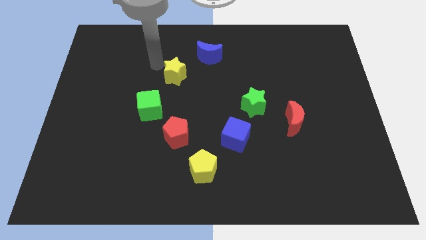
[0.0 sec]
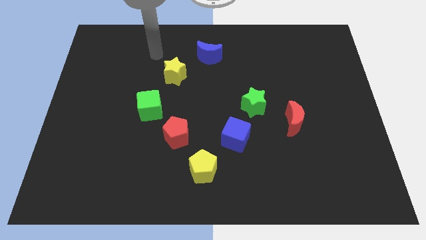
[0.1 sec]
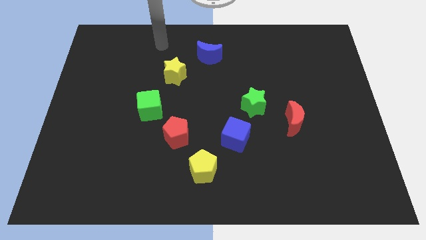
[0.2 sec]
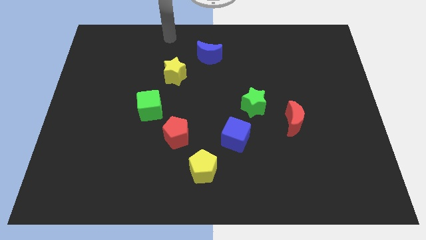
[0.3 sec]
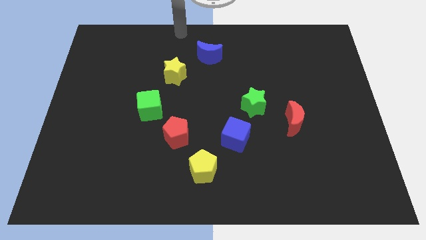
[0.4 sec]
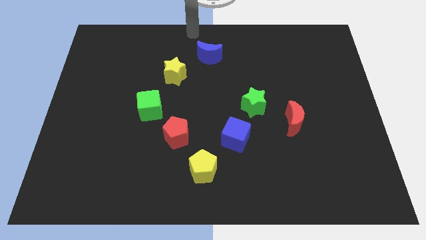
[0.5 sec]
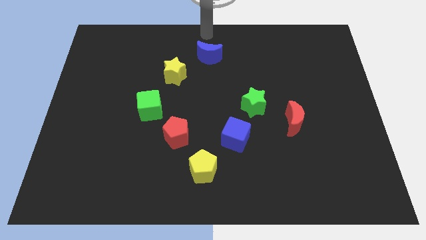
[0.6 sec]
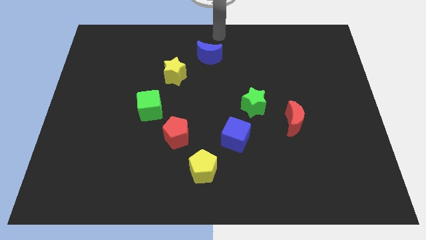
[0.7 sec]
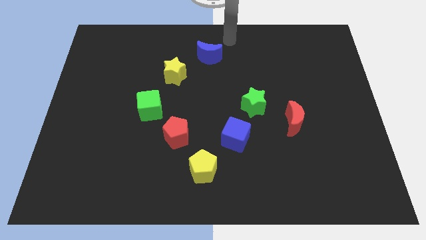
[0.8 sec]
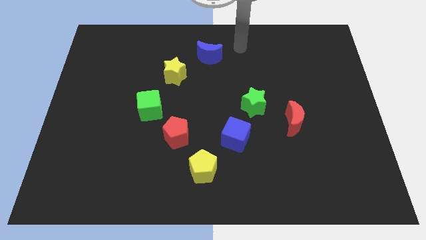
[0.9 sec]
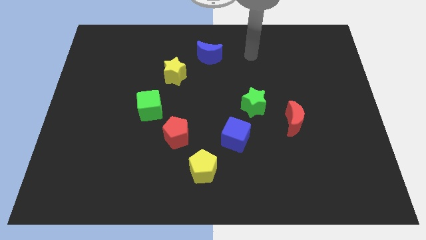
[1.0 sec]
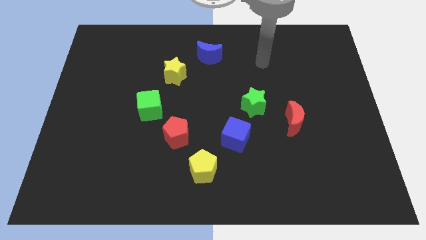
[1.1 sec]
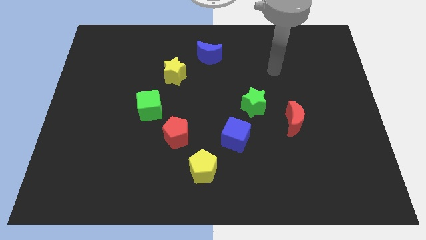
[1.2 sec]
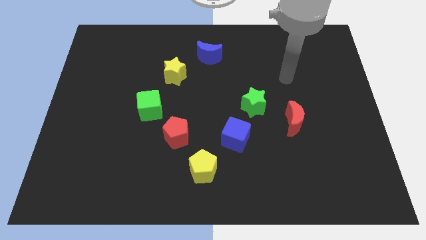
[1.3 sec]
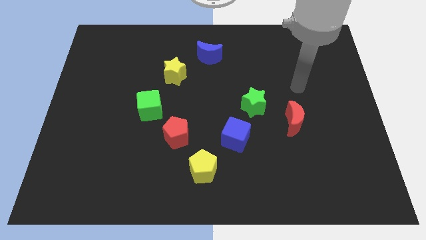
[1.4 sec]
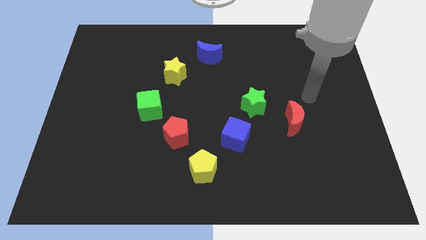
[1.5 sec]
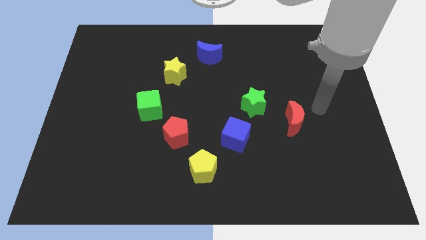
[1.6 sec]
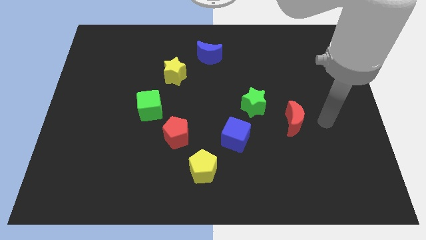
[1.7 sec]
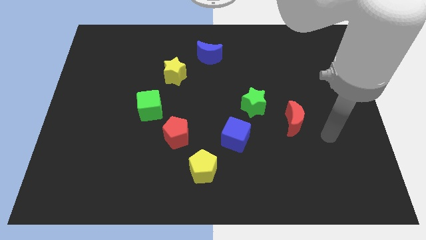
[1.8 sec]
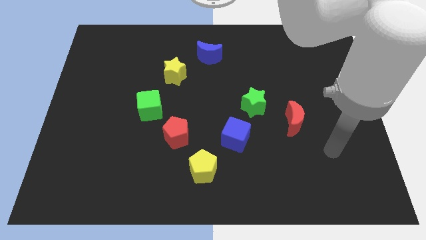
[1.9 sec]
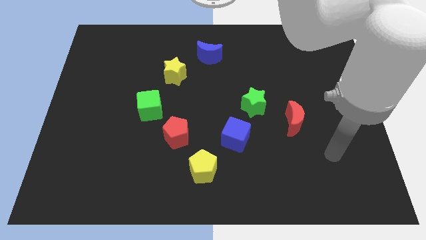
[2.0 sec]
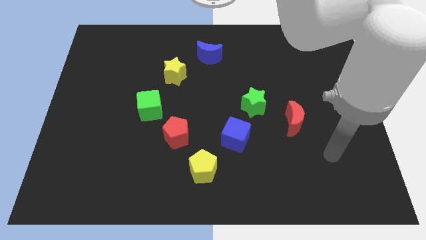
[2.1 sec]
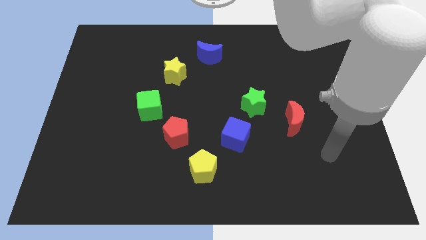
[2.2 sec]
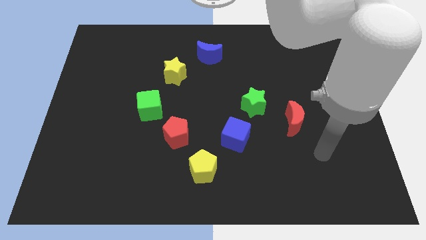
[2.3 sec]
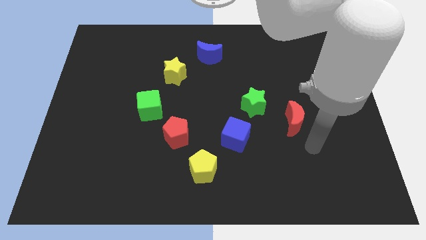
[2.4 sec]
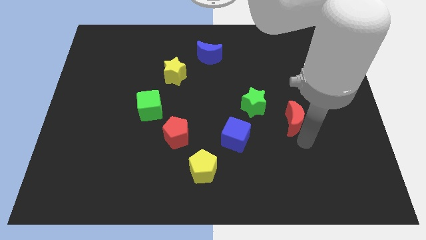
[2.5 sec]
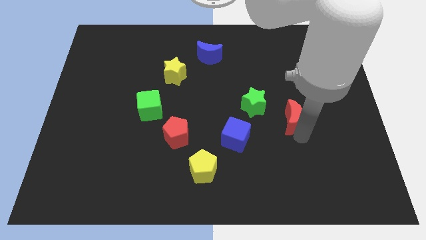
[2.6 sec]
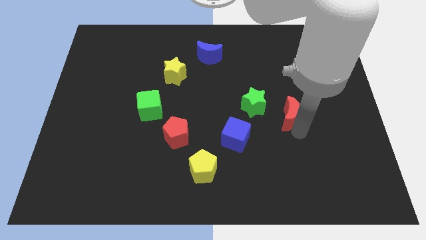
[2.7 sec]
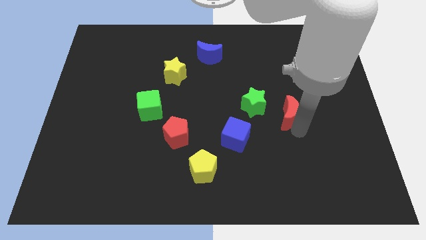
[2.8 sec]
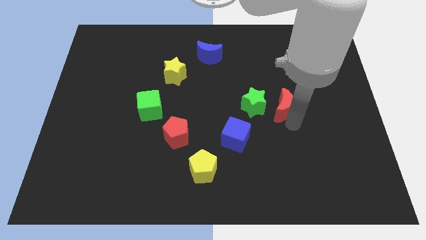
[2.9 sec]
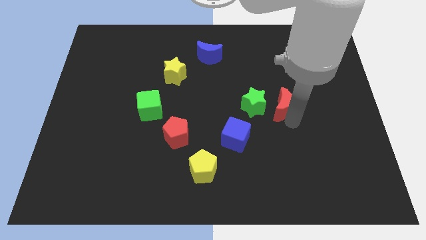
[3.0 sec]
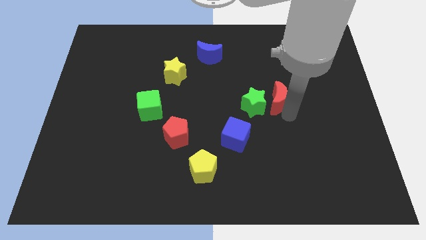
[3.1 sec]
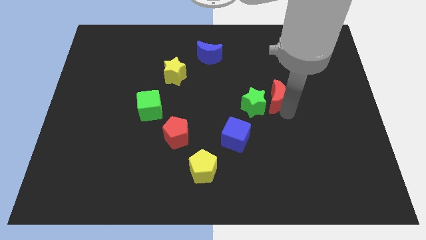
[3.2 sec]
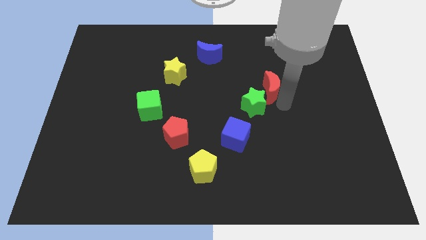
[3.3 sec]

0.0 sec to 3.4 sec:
push the red moon into green star slightly to right

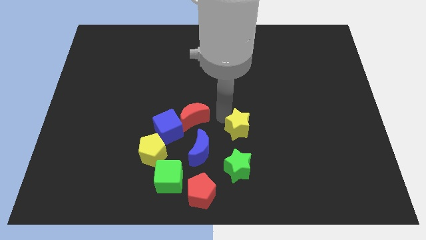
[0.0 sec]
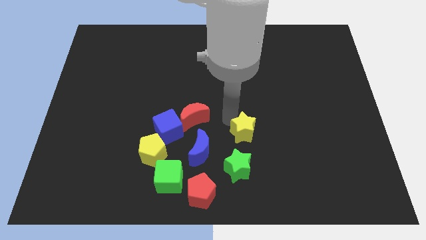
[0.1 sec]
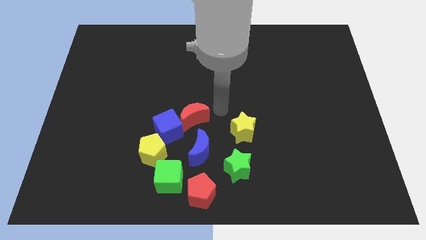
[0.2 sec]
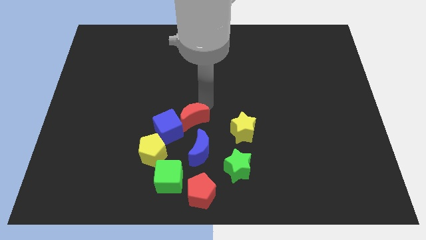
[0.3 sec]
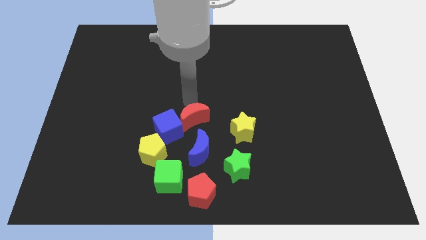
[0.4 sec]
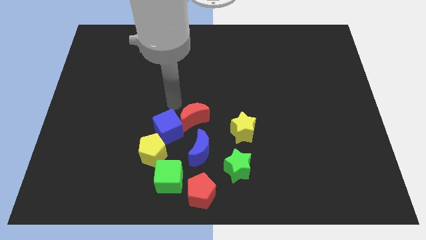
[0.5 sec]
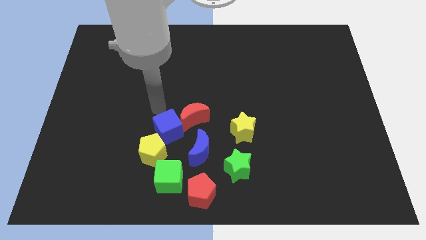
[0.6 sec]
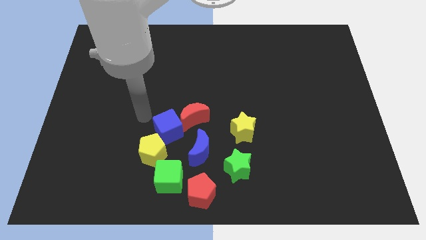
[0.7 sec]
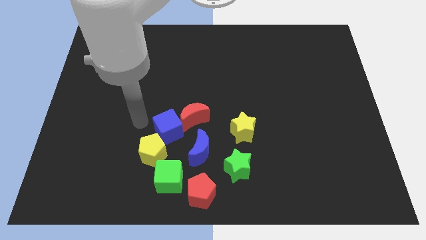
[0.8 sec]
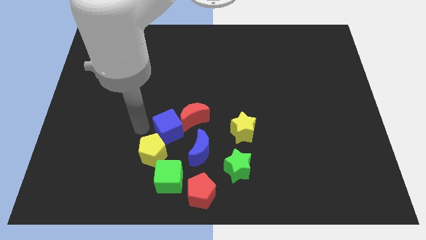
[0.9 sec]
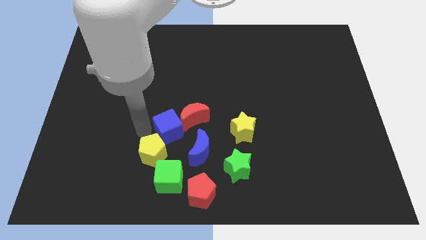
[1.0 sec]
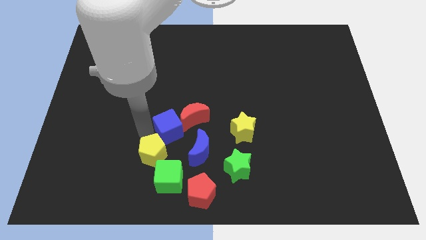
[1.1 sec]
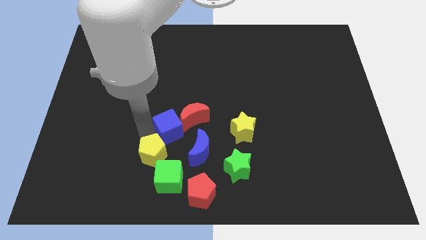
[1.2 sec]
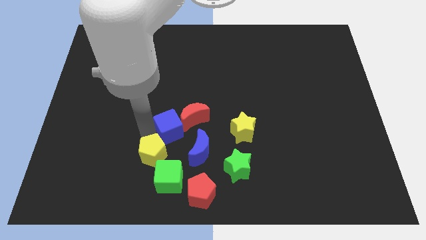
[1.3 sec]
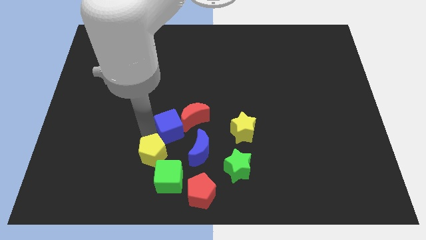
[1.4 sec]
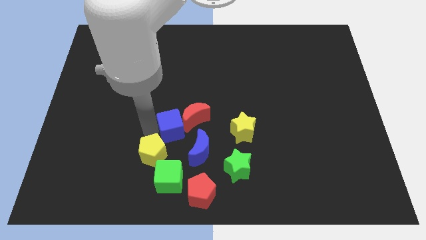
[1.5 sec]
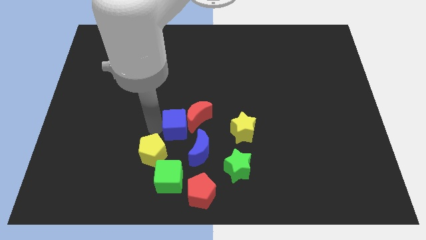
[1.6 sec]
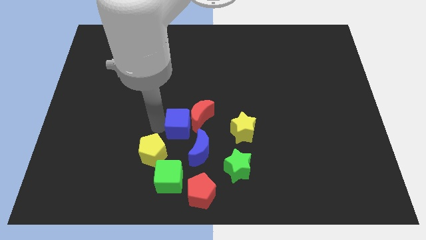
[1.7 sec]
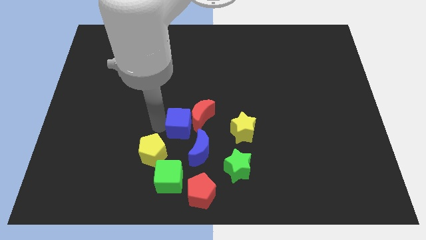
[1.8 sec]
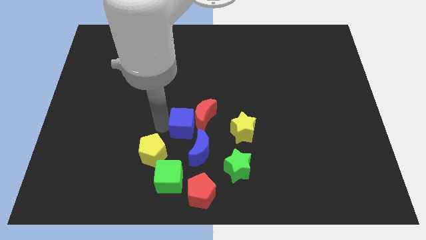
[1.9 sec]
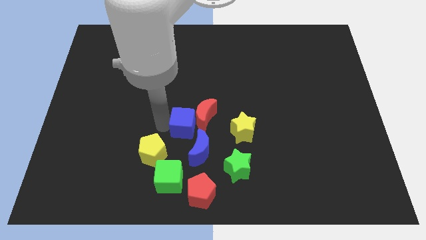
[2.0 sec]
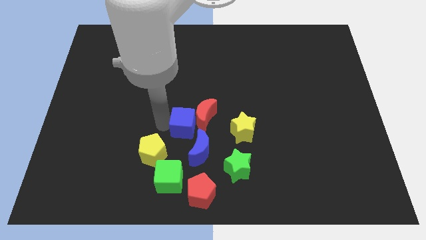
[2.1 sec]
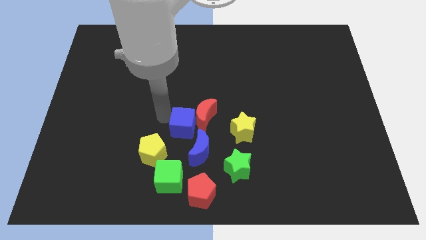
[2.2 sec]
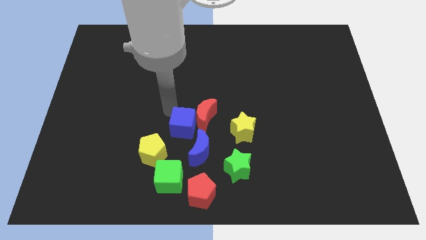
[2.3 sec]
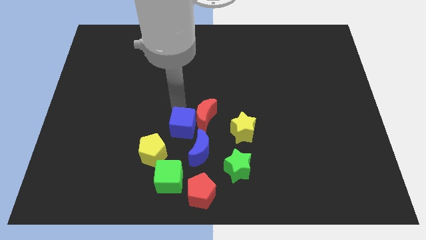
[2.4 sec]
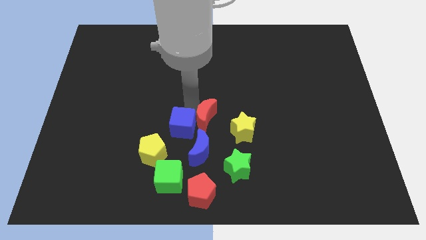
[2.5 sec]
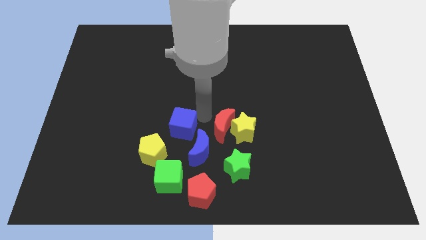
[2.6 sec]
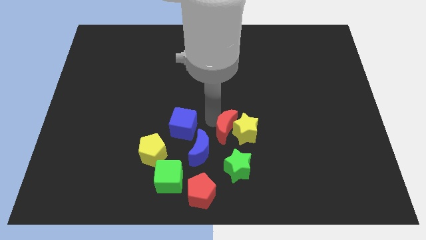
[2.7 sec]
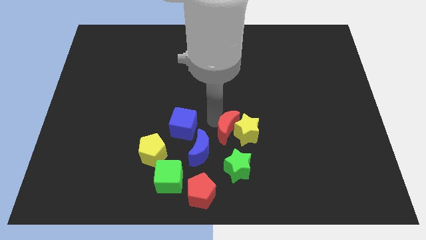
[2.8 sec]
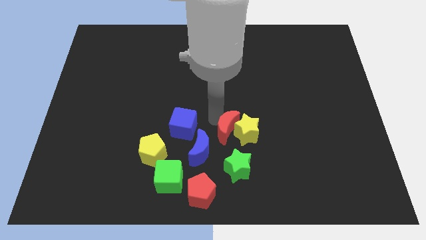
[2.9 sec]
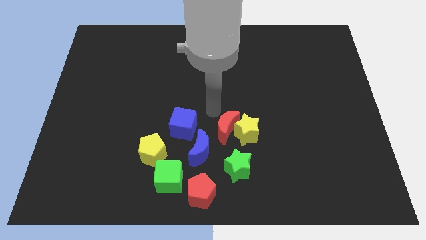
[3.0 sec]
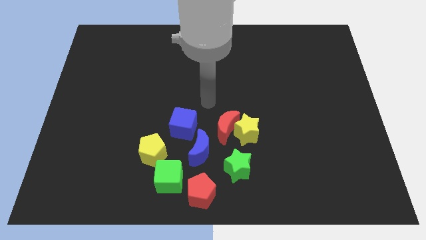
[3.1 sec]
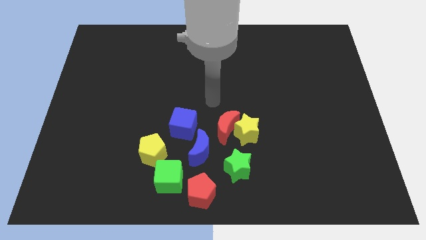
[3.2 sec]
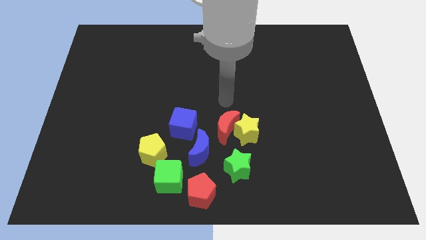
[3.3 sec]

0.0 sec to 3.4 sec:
place the red crescent close to the yellow star

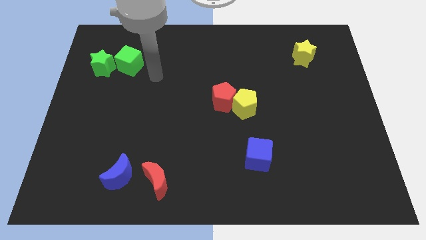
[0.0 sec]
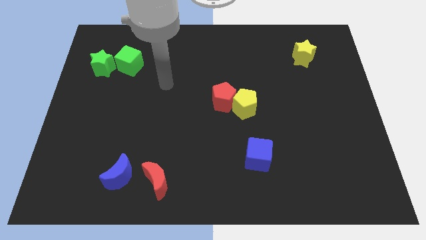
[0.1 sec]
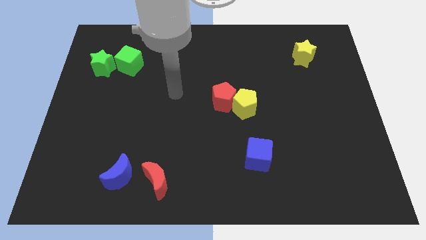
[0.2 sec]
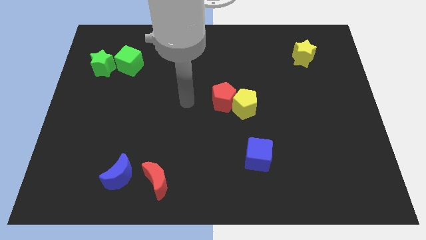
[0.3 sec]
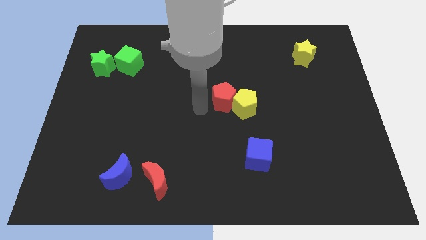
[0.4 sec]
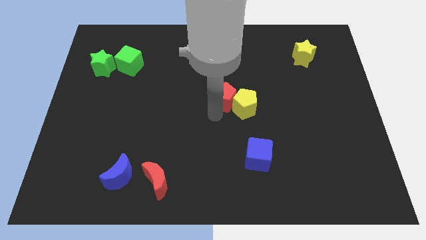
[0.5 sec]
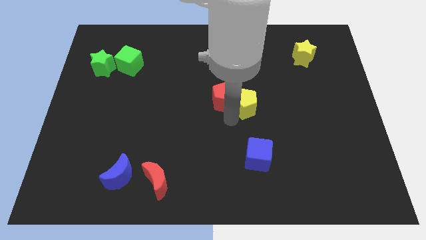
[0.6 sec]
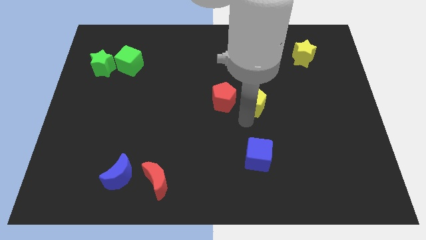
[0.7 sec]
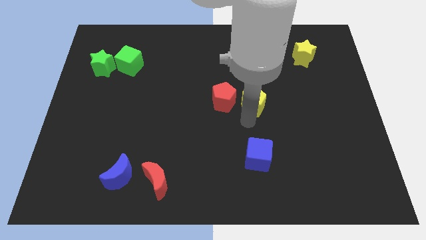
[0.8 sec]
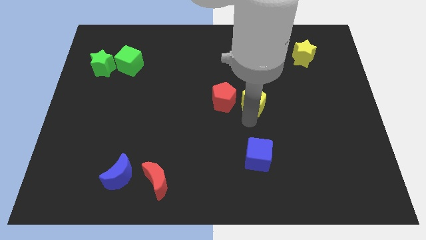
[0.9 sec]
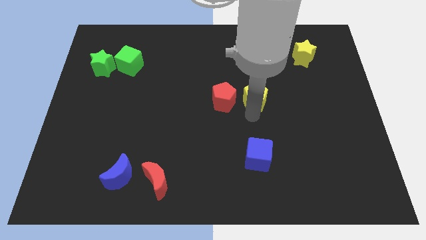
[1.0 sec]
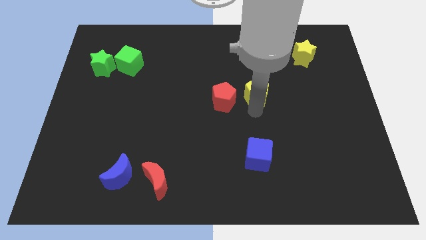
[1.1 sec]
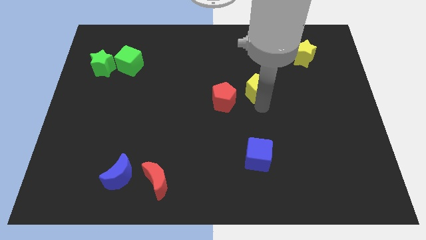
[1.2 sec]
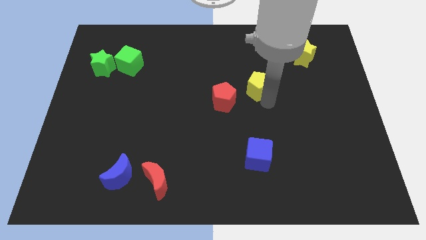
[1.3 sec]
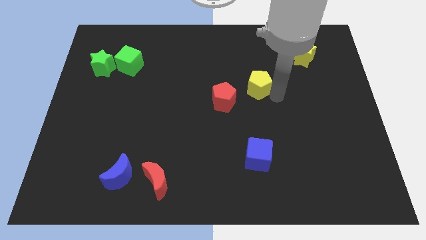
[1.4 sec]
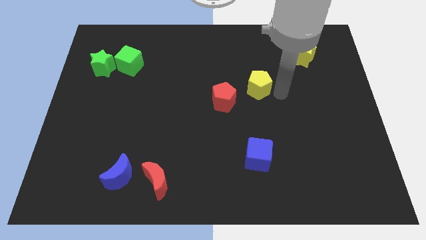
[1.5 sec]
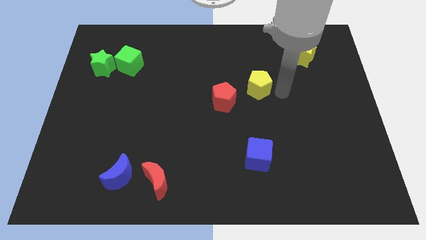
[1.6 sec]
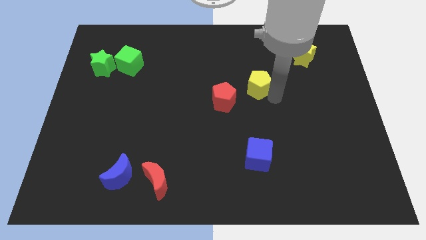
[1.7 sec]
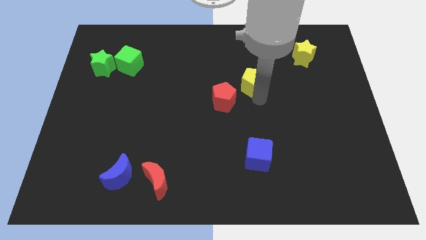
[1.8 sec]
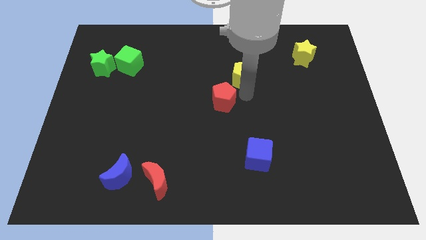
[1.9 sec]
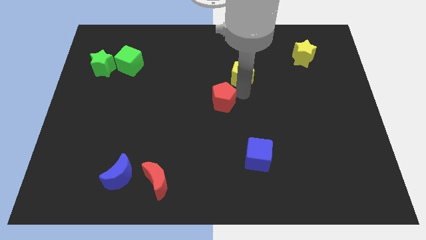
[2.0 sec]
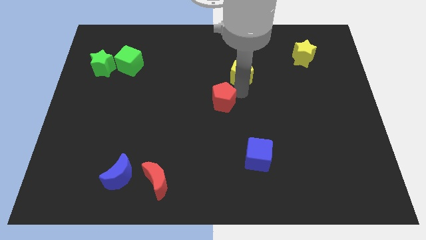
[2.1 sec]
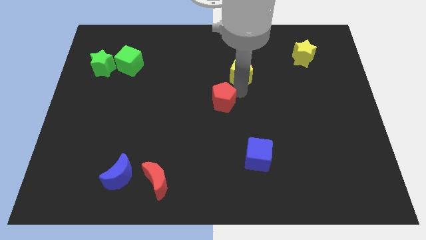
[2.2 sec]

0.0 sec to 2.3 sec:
push the yellow star slightly upwards
